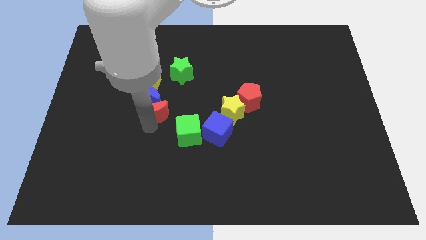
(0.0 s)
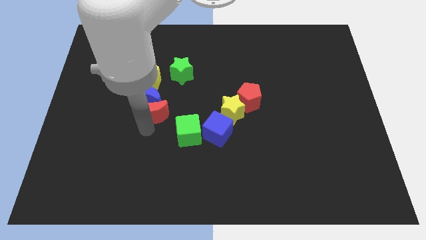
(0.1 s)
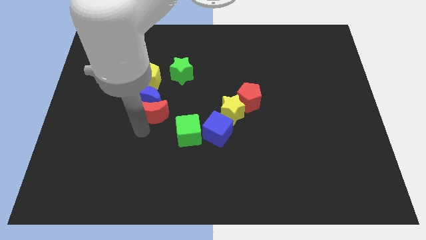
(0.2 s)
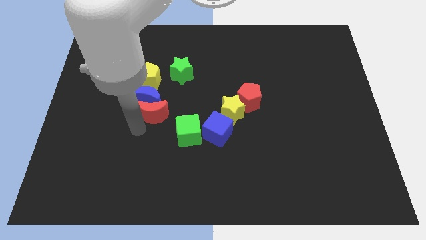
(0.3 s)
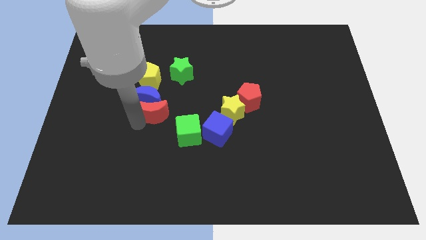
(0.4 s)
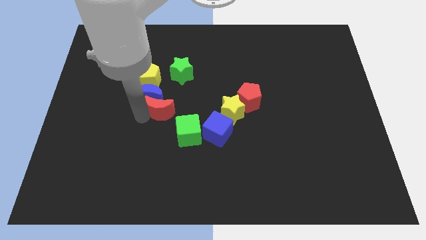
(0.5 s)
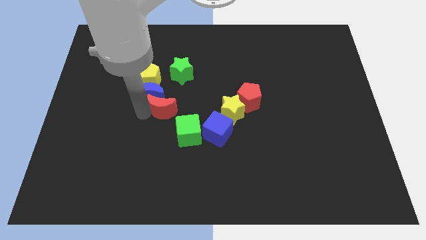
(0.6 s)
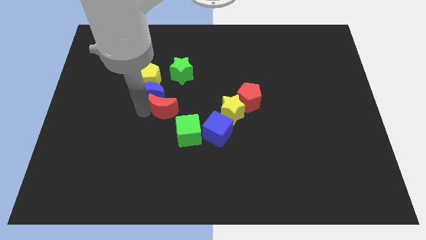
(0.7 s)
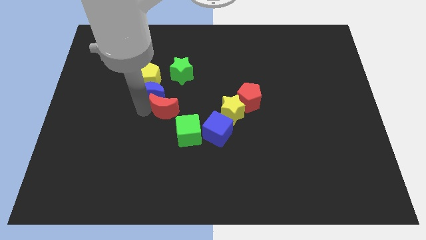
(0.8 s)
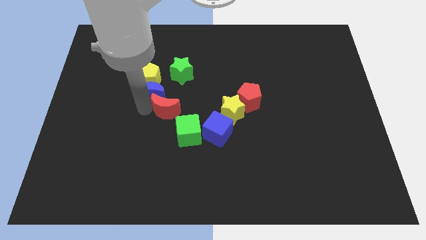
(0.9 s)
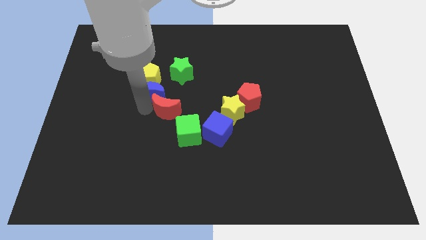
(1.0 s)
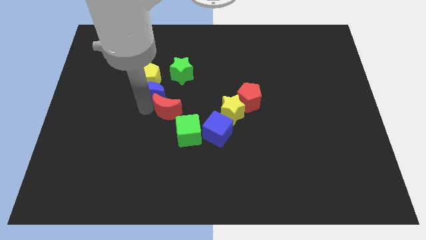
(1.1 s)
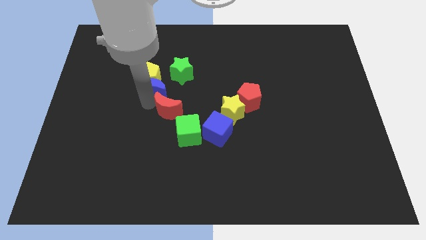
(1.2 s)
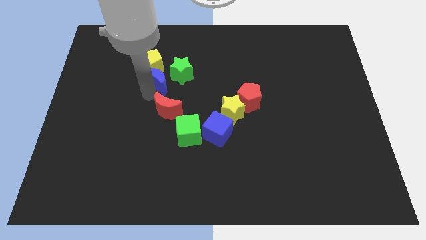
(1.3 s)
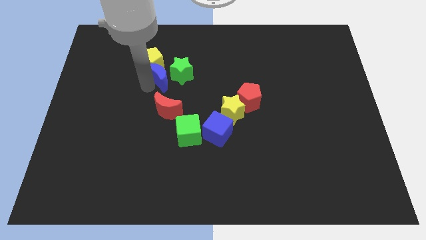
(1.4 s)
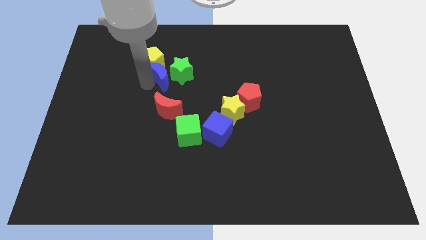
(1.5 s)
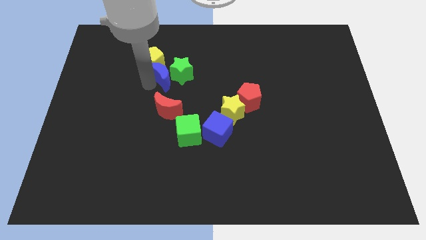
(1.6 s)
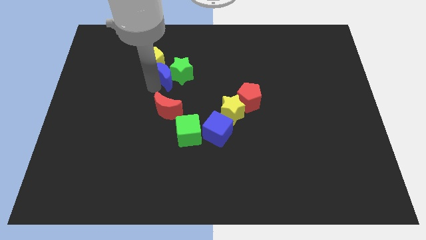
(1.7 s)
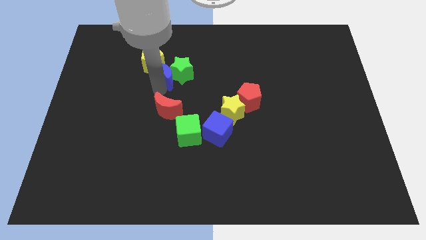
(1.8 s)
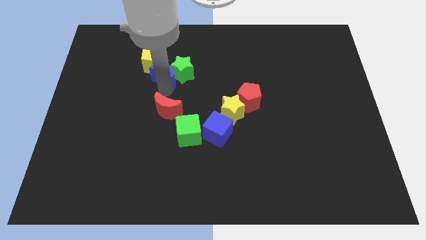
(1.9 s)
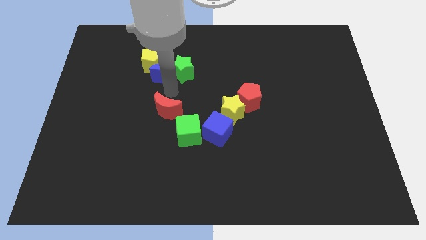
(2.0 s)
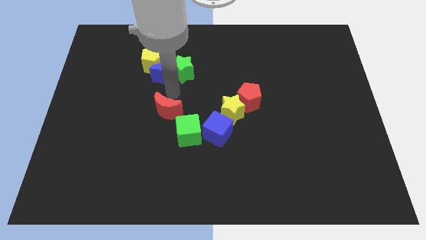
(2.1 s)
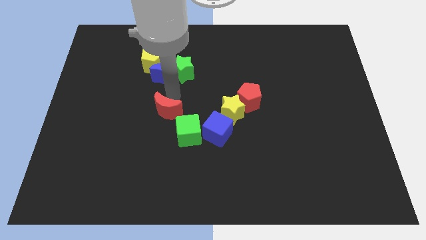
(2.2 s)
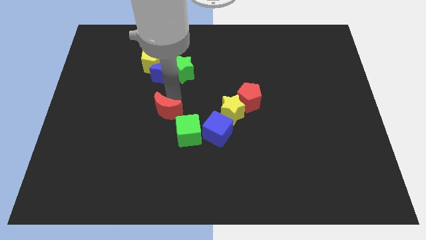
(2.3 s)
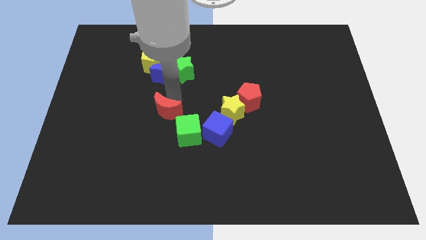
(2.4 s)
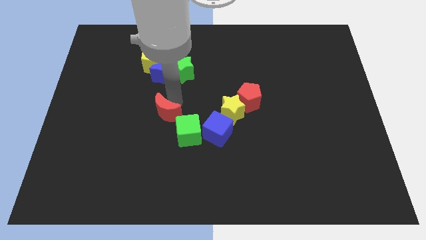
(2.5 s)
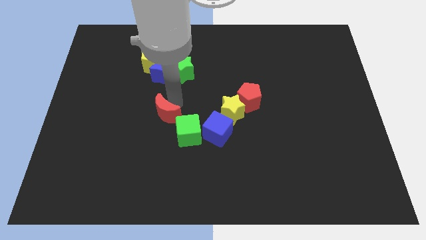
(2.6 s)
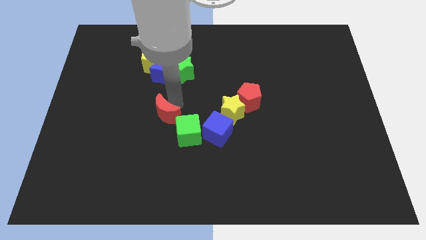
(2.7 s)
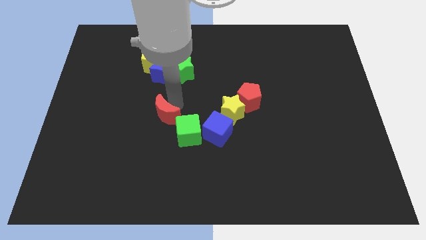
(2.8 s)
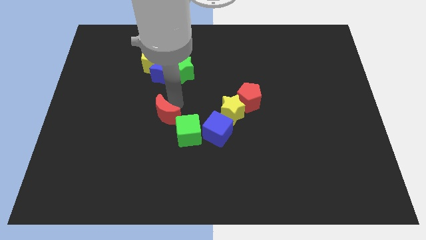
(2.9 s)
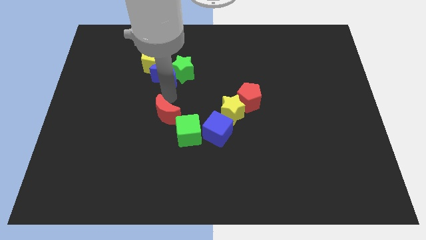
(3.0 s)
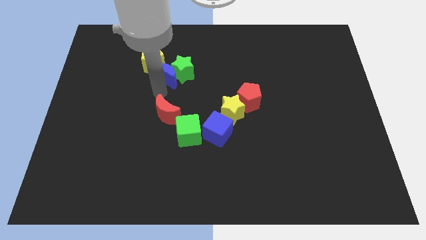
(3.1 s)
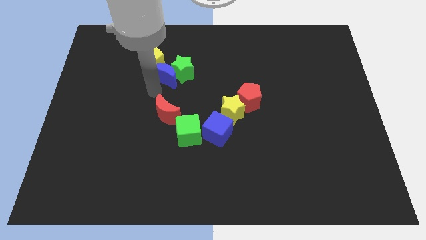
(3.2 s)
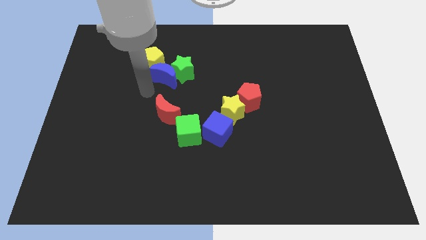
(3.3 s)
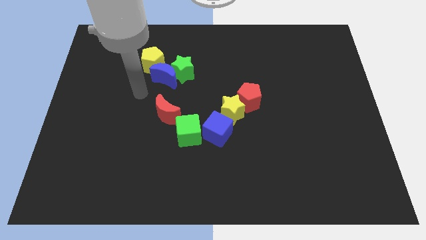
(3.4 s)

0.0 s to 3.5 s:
push the blue moon into the yellow pentagon towards up

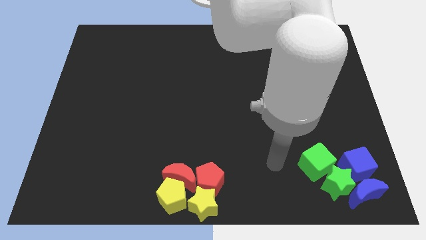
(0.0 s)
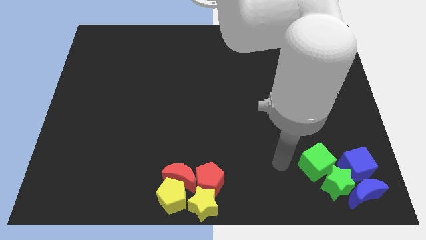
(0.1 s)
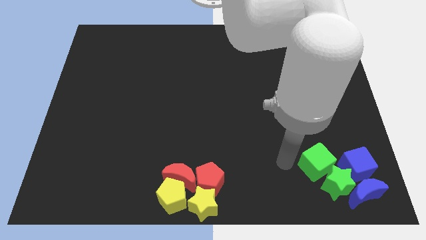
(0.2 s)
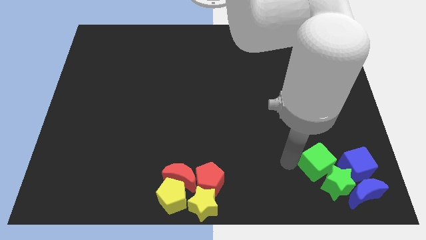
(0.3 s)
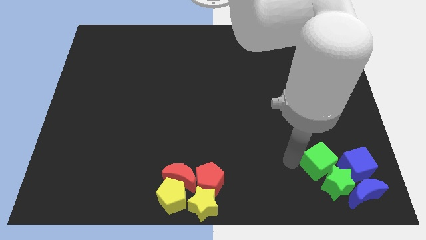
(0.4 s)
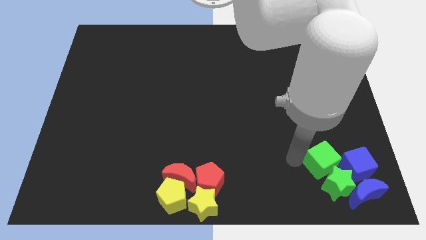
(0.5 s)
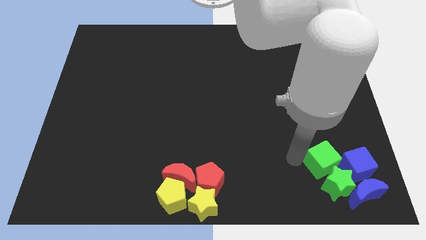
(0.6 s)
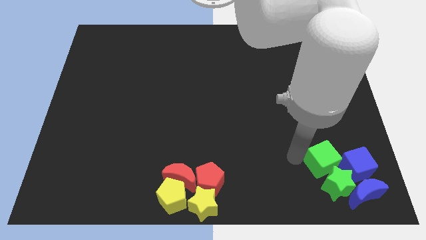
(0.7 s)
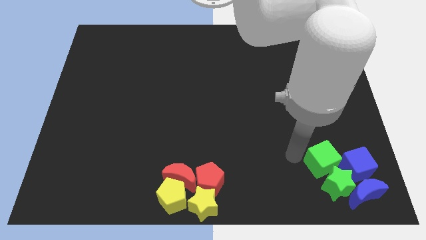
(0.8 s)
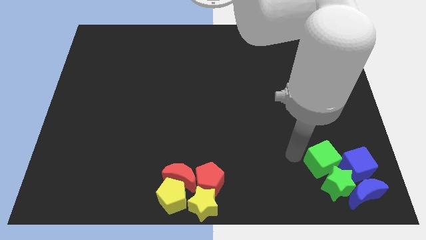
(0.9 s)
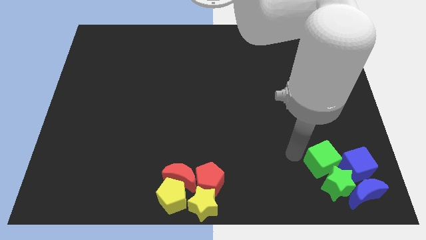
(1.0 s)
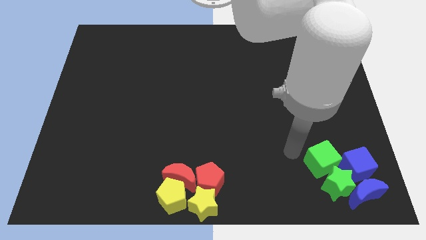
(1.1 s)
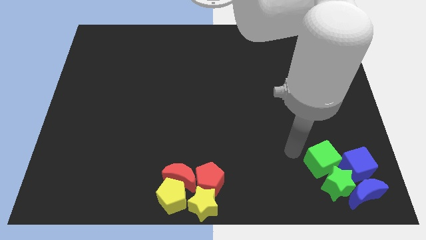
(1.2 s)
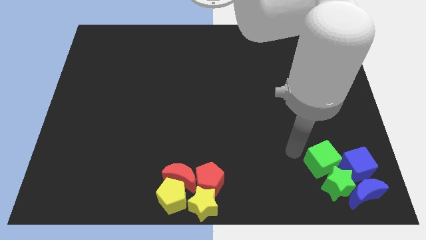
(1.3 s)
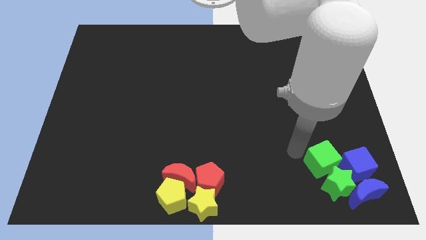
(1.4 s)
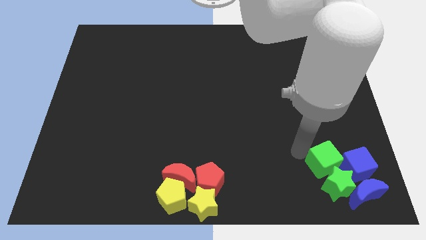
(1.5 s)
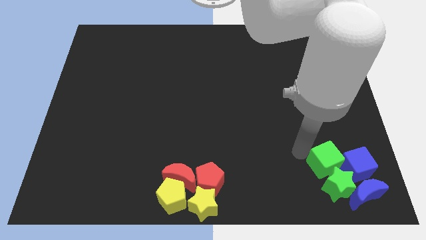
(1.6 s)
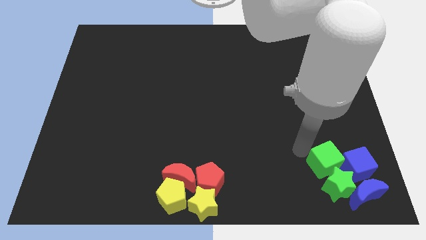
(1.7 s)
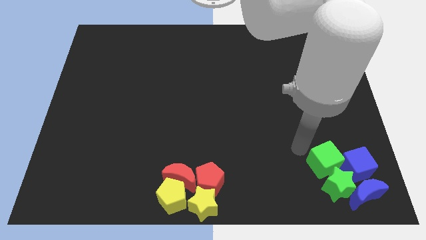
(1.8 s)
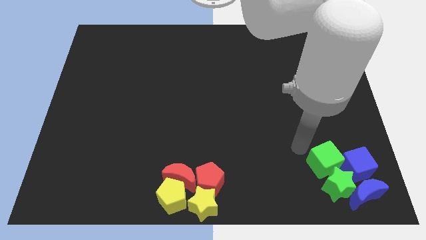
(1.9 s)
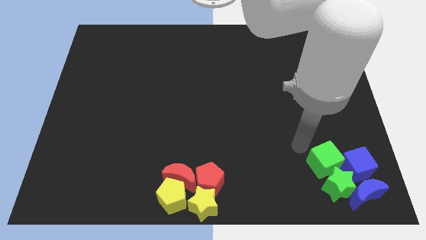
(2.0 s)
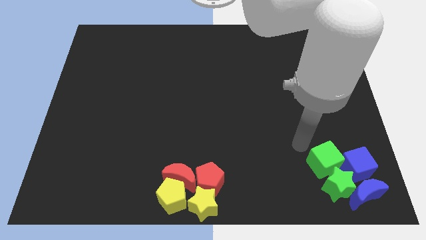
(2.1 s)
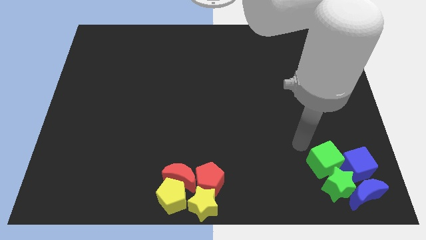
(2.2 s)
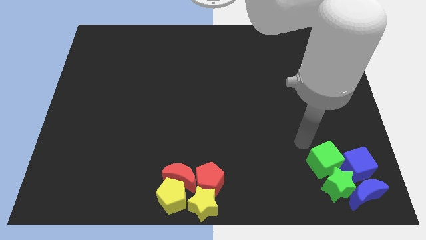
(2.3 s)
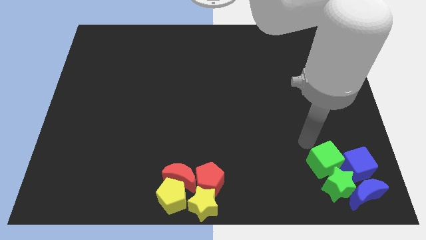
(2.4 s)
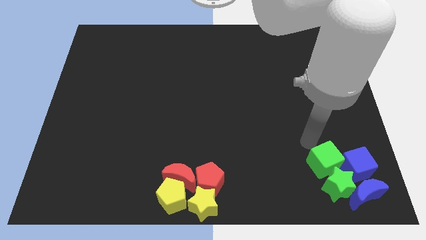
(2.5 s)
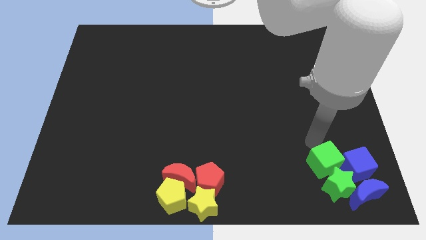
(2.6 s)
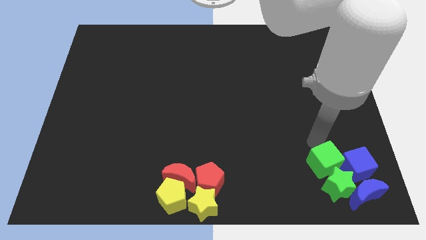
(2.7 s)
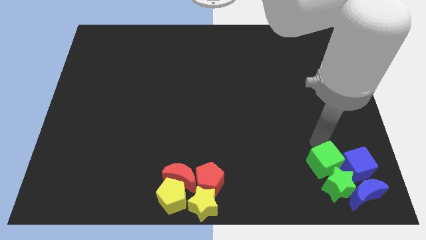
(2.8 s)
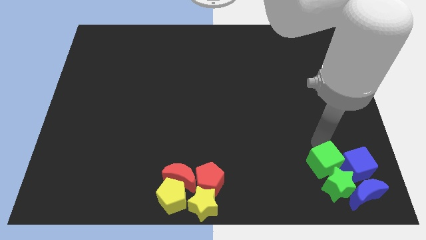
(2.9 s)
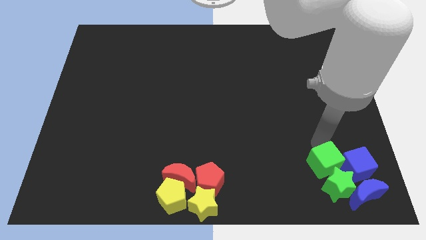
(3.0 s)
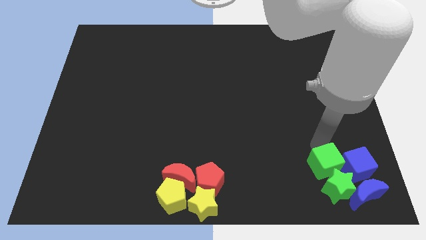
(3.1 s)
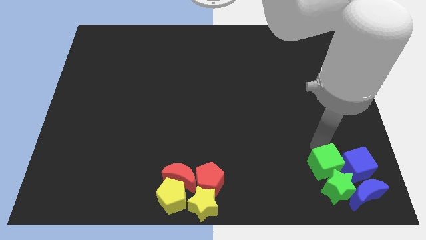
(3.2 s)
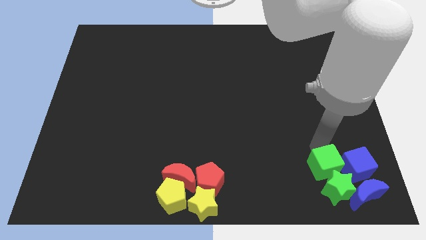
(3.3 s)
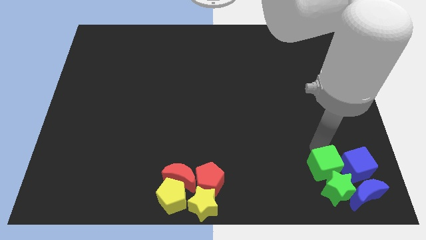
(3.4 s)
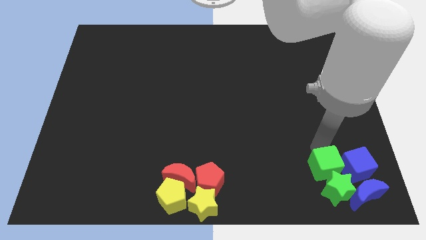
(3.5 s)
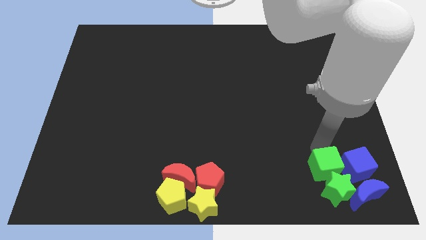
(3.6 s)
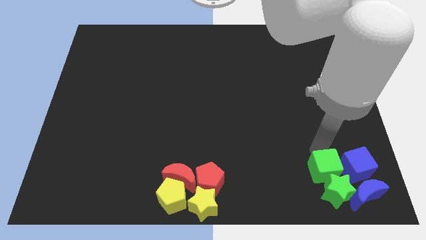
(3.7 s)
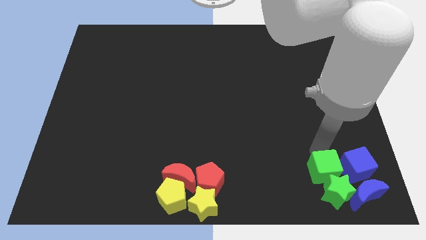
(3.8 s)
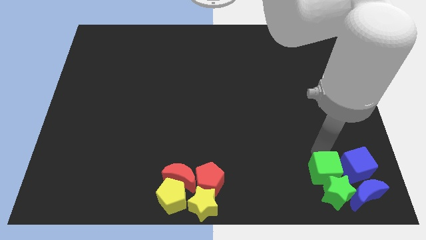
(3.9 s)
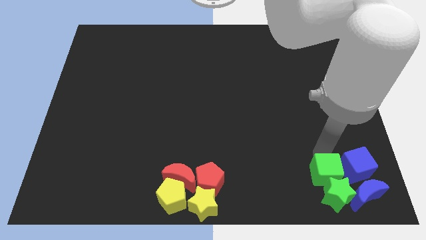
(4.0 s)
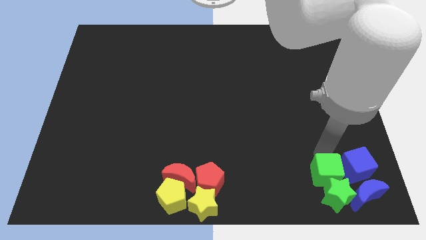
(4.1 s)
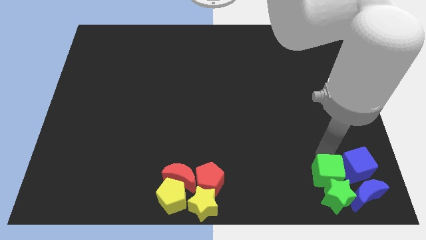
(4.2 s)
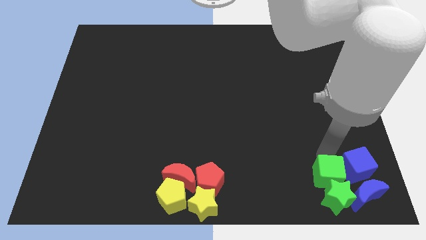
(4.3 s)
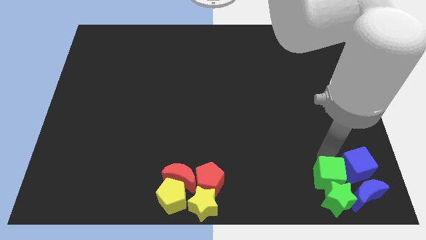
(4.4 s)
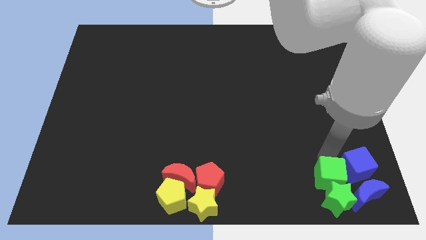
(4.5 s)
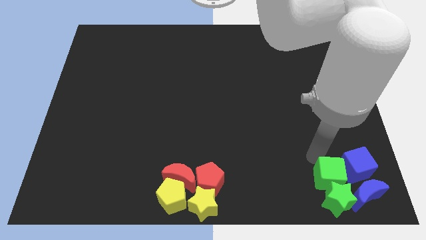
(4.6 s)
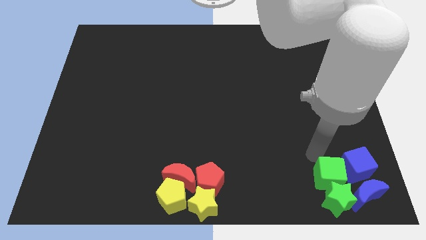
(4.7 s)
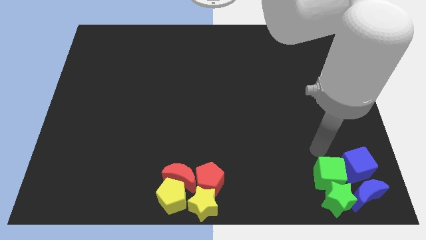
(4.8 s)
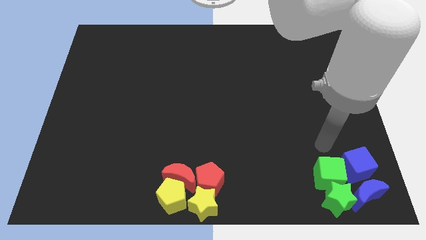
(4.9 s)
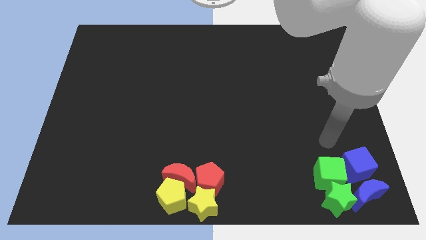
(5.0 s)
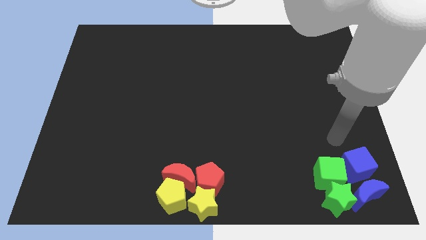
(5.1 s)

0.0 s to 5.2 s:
push the green star slightly towards the bottom end of the board by green cube

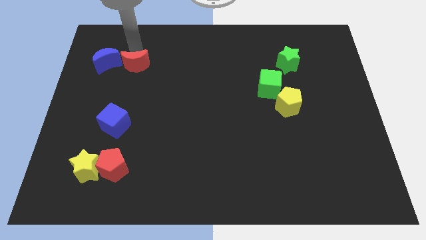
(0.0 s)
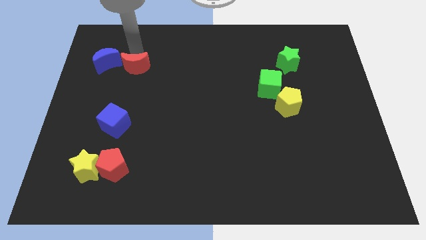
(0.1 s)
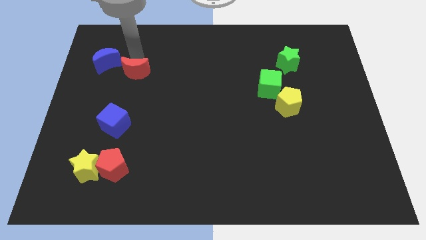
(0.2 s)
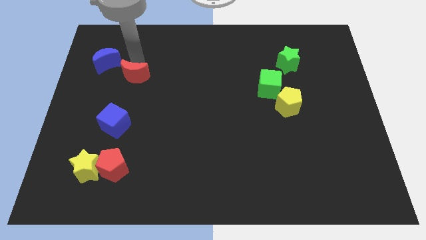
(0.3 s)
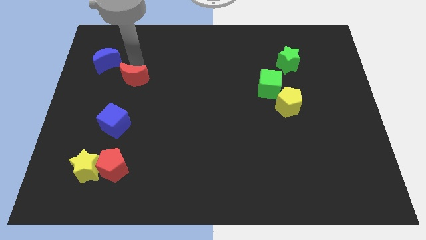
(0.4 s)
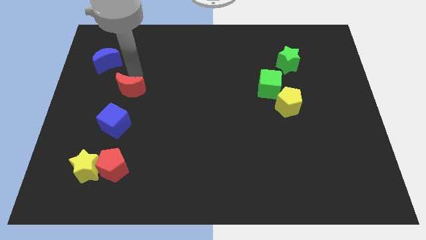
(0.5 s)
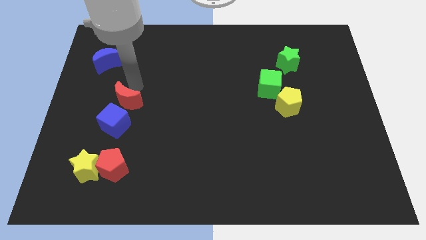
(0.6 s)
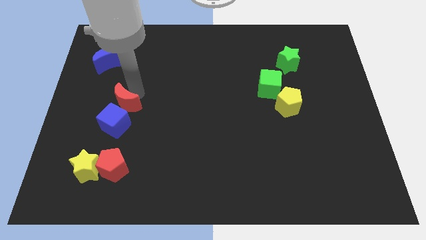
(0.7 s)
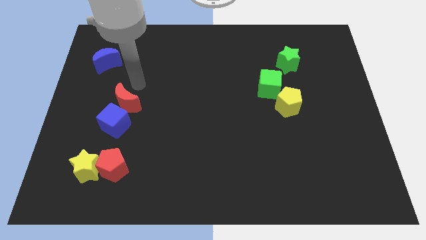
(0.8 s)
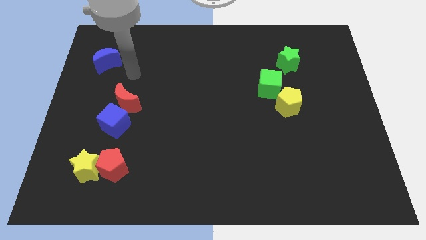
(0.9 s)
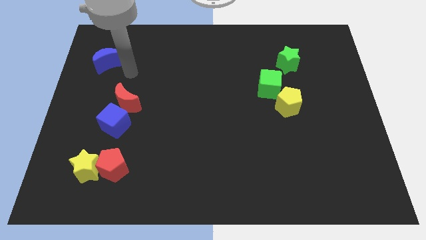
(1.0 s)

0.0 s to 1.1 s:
move the red crescent into the blue cube
